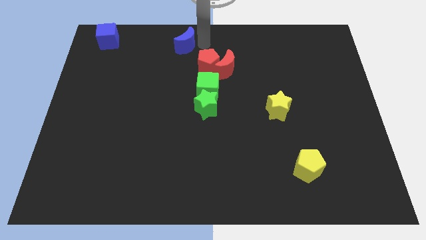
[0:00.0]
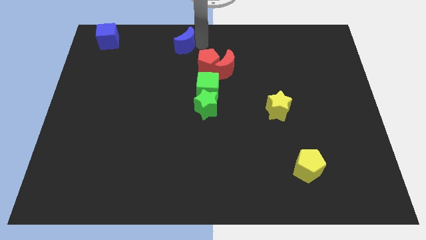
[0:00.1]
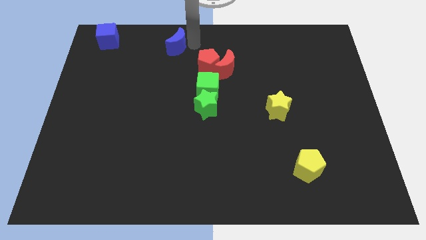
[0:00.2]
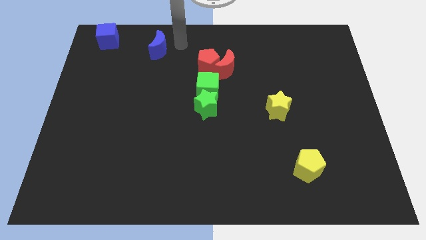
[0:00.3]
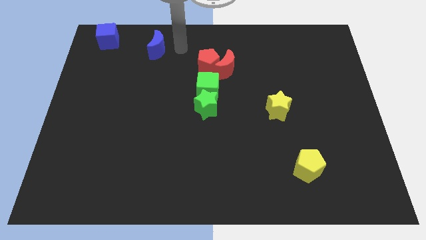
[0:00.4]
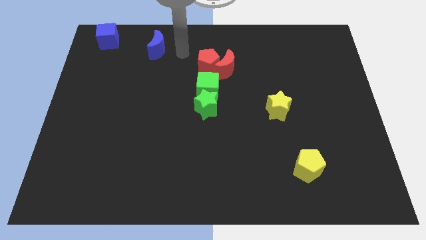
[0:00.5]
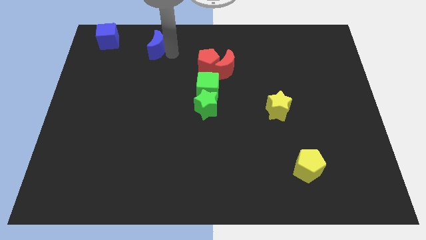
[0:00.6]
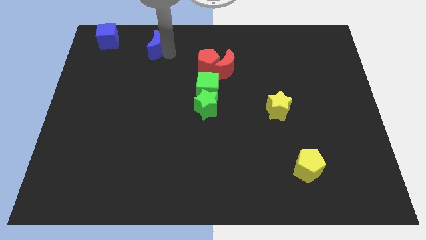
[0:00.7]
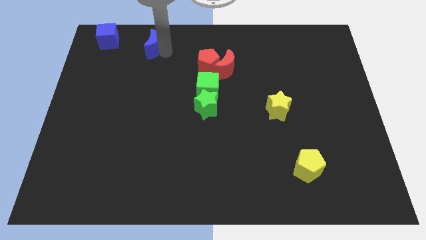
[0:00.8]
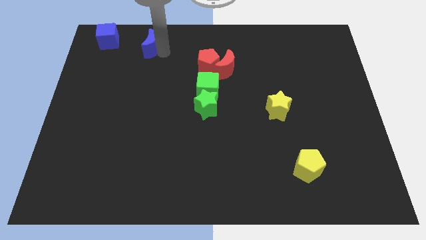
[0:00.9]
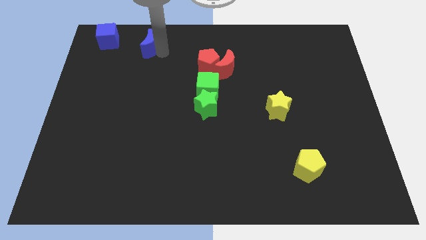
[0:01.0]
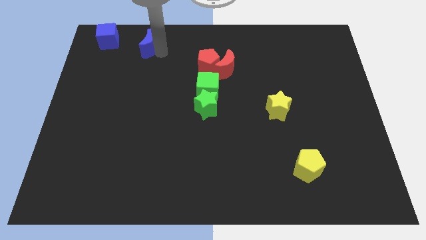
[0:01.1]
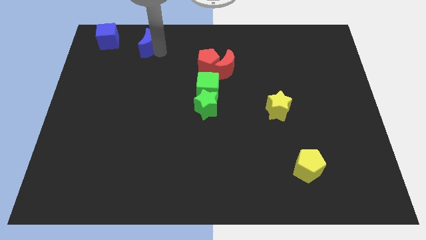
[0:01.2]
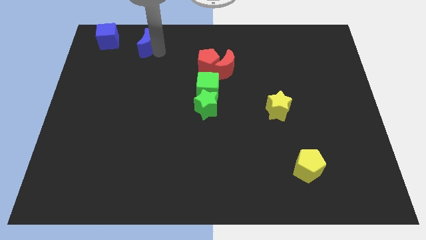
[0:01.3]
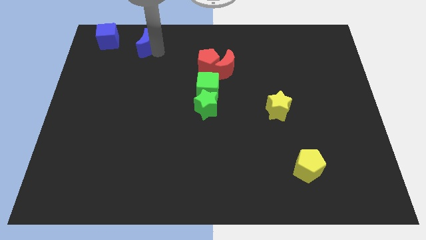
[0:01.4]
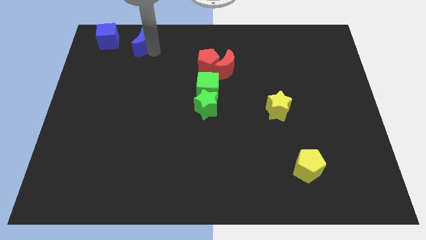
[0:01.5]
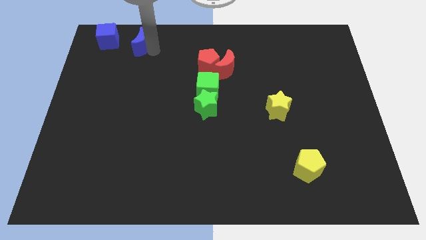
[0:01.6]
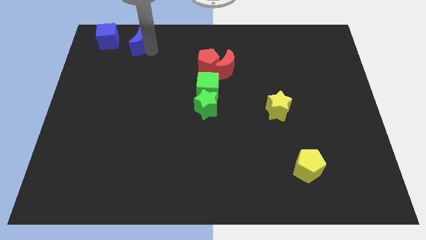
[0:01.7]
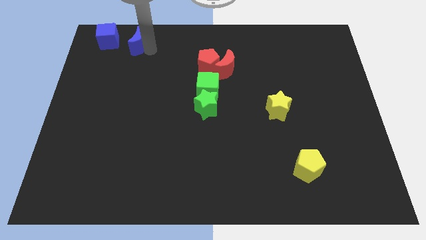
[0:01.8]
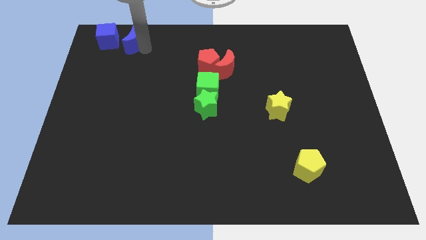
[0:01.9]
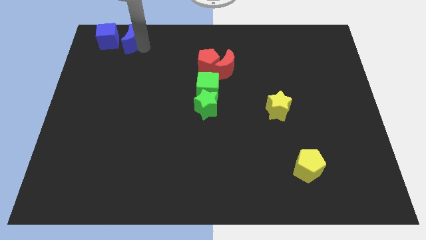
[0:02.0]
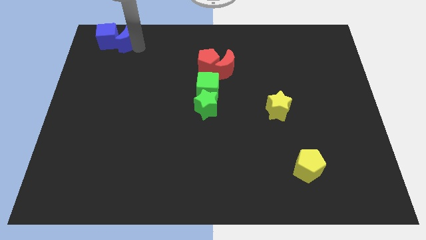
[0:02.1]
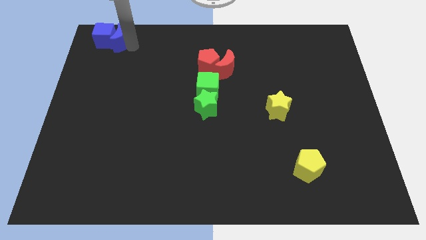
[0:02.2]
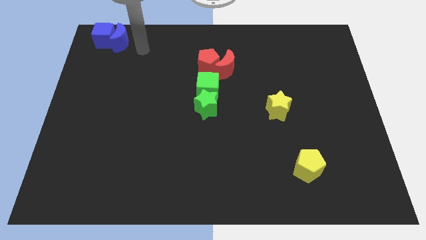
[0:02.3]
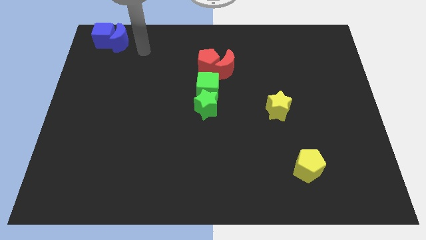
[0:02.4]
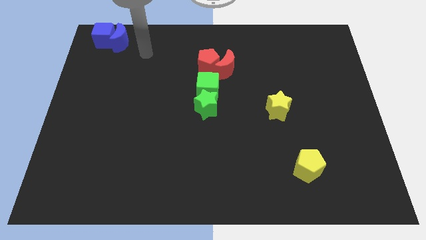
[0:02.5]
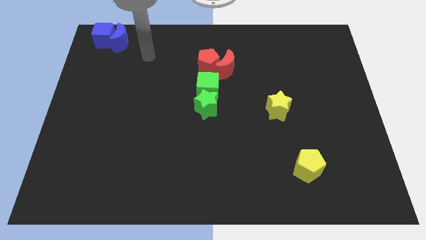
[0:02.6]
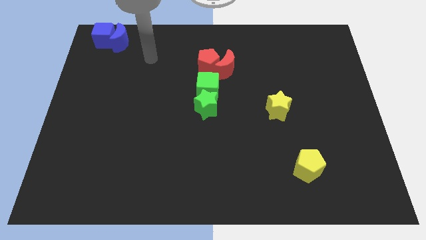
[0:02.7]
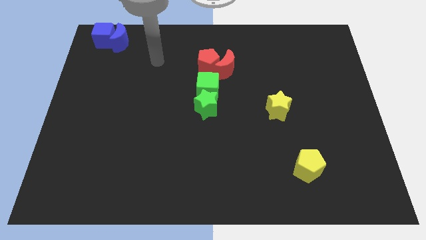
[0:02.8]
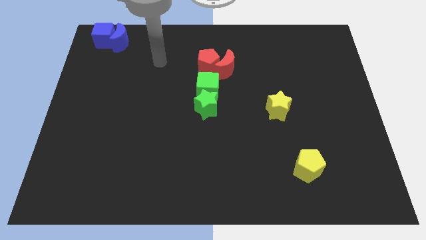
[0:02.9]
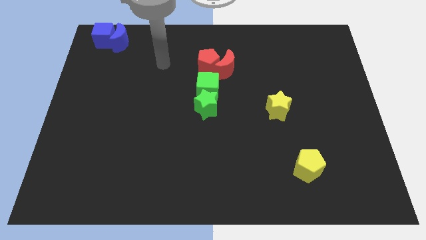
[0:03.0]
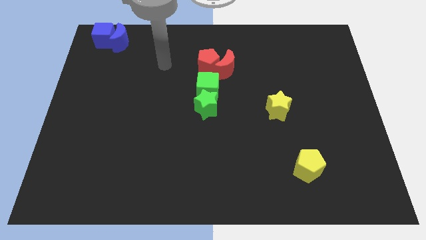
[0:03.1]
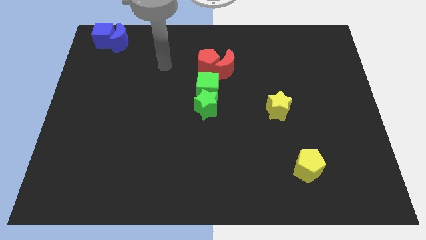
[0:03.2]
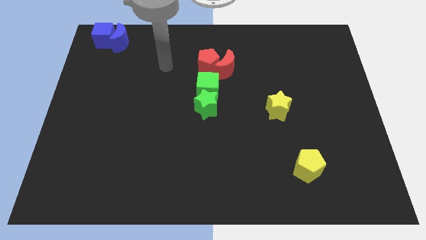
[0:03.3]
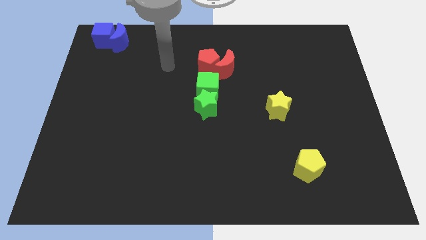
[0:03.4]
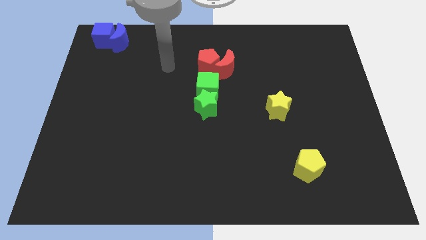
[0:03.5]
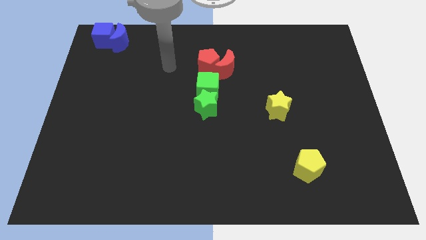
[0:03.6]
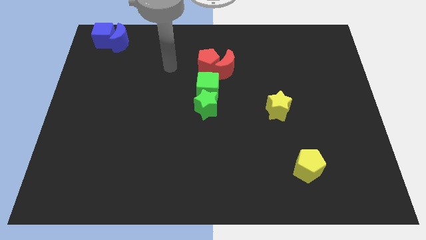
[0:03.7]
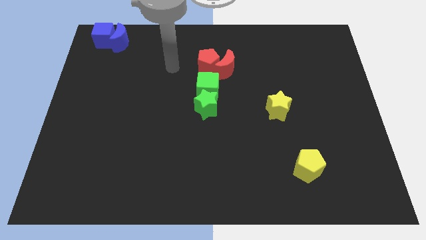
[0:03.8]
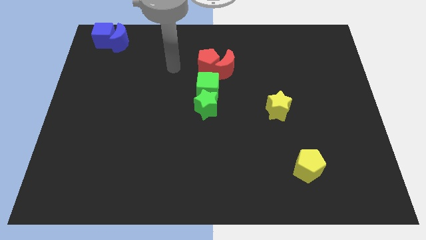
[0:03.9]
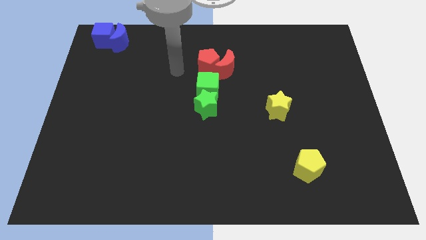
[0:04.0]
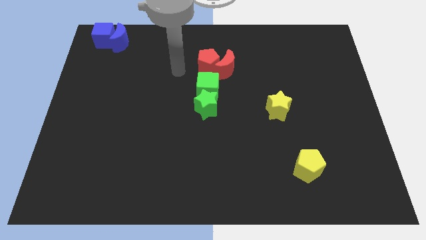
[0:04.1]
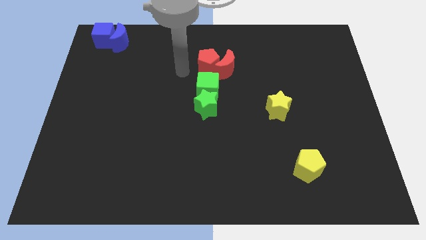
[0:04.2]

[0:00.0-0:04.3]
push the blue crescent into the blue cube

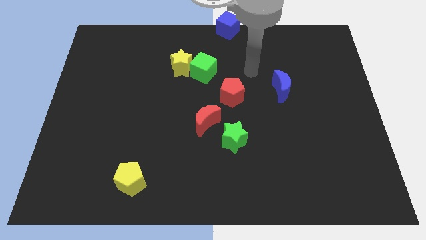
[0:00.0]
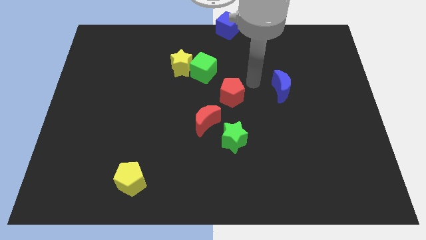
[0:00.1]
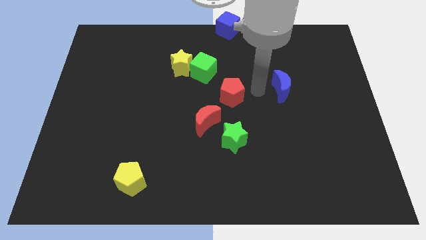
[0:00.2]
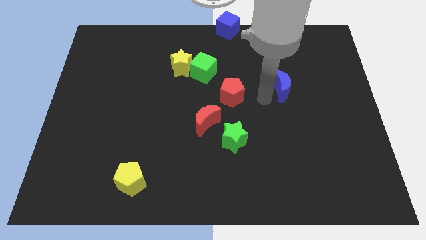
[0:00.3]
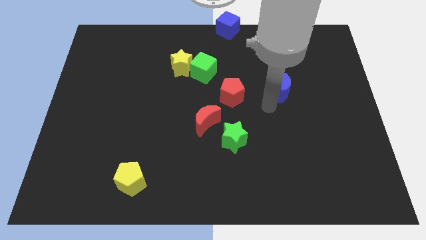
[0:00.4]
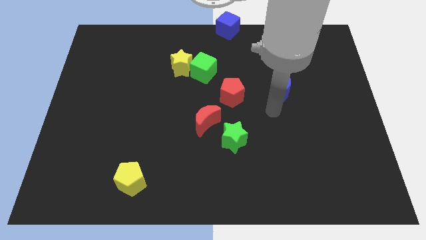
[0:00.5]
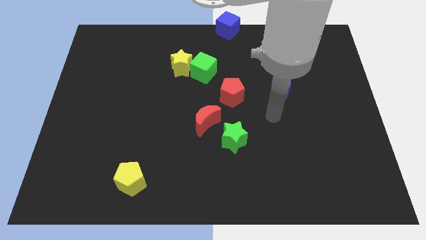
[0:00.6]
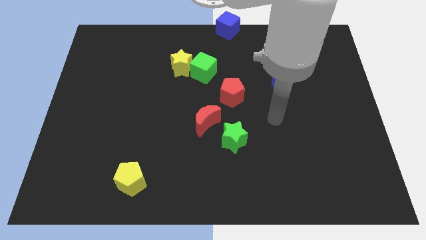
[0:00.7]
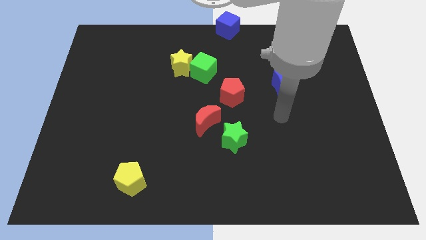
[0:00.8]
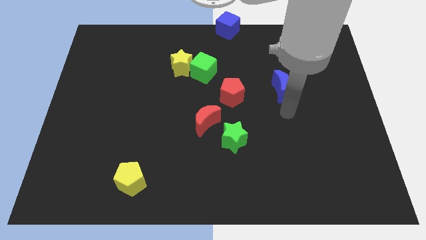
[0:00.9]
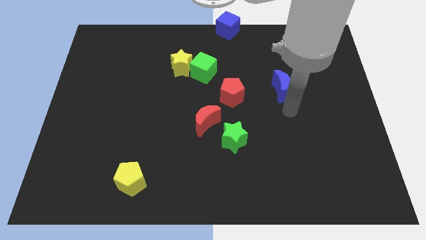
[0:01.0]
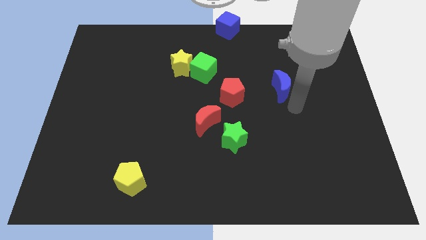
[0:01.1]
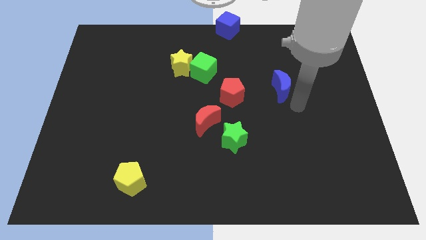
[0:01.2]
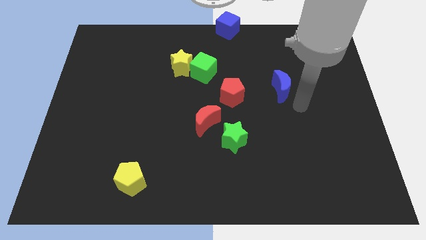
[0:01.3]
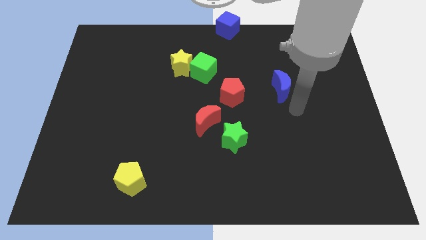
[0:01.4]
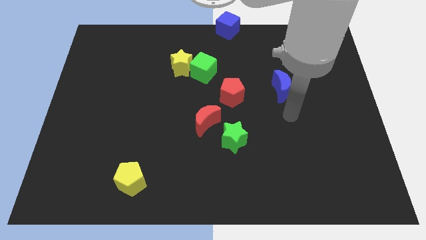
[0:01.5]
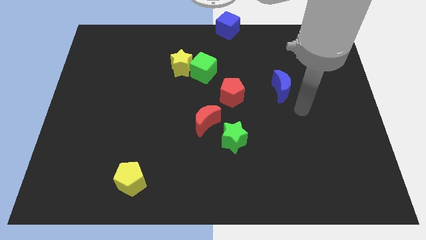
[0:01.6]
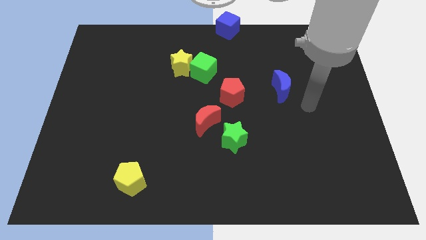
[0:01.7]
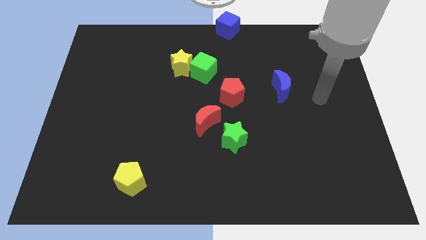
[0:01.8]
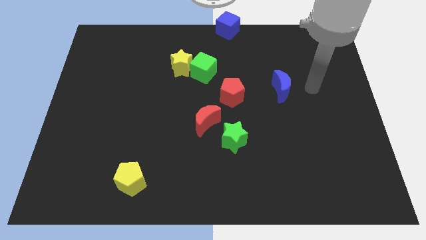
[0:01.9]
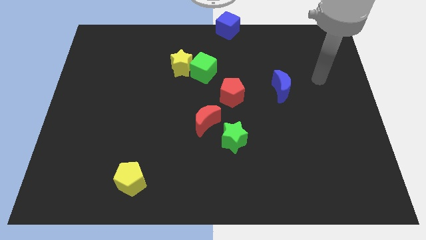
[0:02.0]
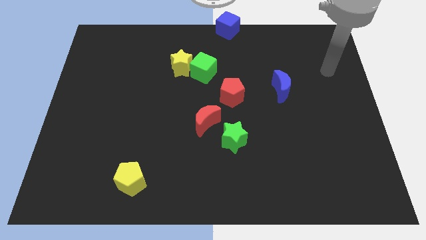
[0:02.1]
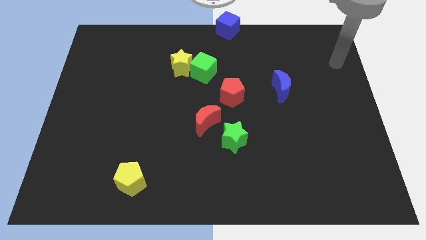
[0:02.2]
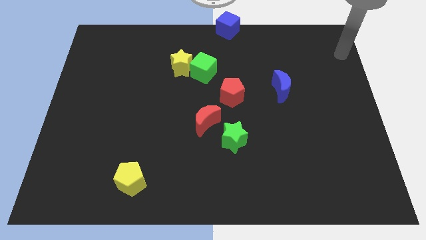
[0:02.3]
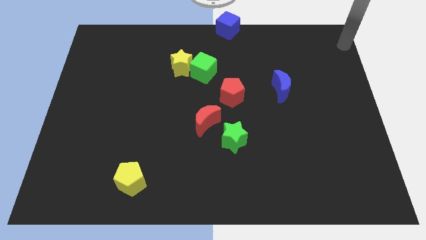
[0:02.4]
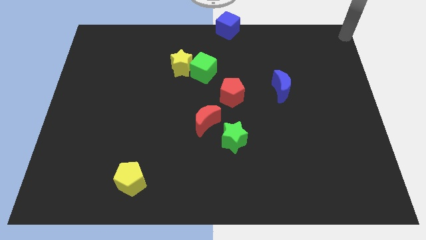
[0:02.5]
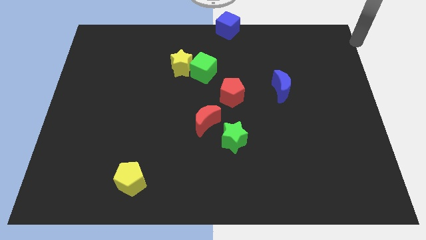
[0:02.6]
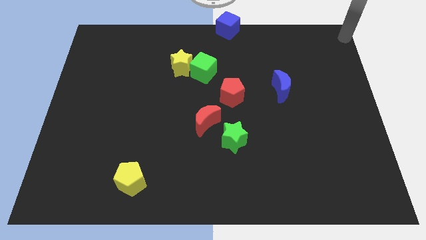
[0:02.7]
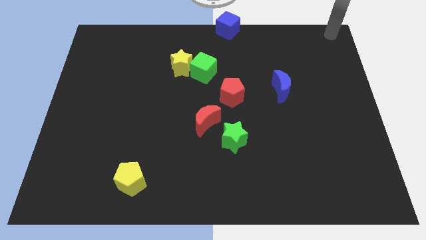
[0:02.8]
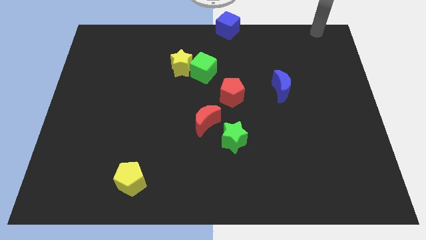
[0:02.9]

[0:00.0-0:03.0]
push arm on top right corner

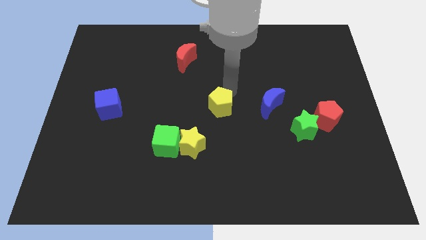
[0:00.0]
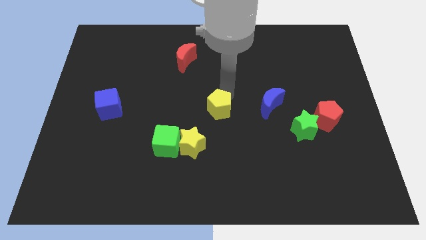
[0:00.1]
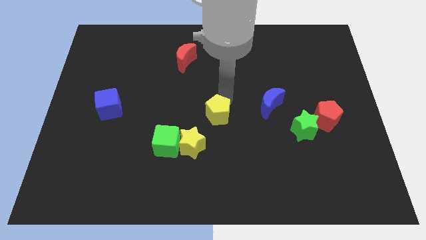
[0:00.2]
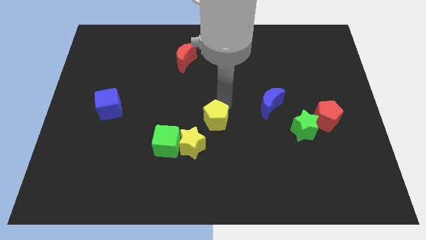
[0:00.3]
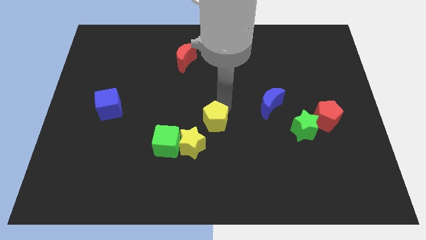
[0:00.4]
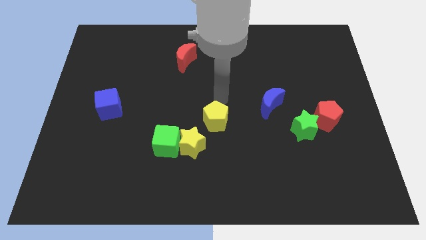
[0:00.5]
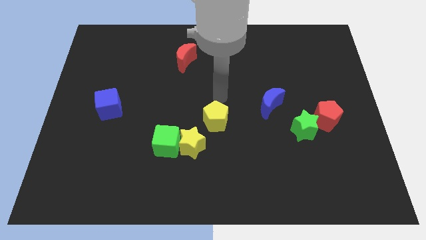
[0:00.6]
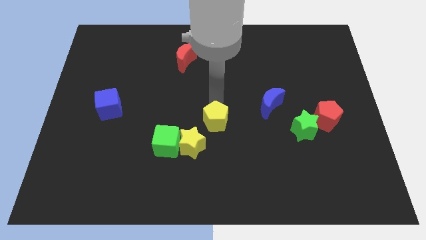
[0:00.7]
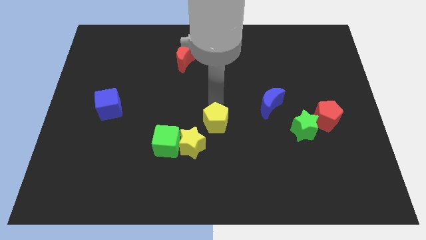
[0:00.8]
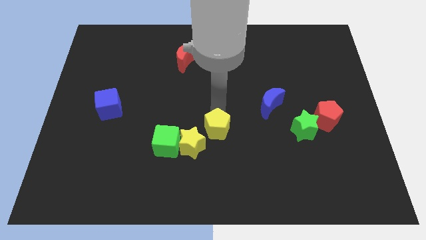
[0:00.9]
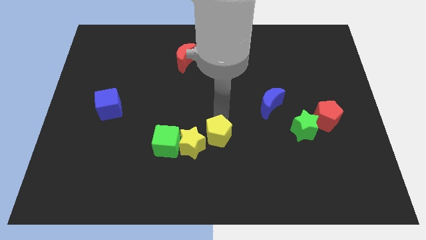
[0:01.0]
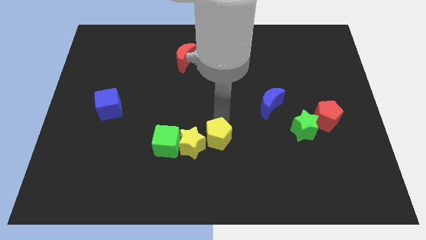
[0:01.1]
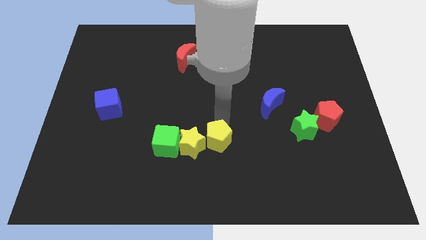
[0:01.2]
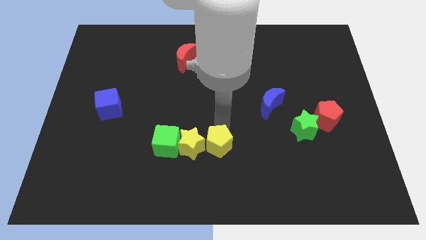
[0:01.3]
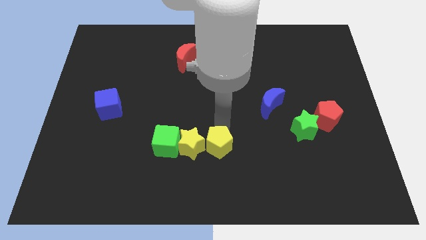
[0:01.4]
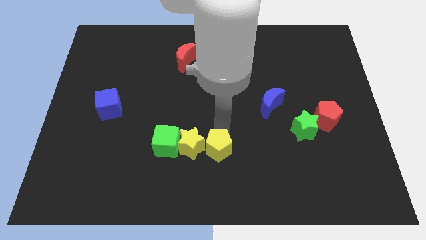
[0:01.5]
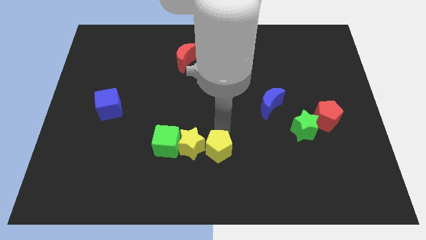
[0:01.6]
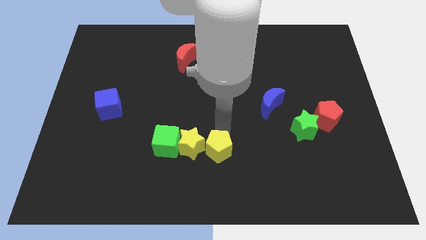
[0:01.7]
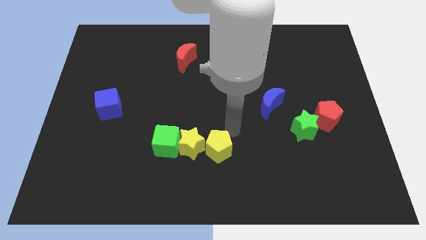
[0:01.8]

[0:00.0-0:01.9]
push the yellow pentagon downward
